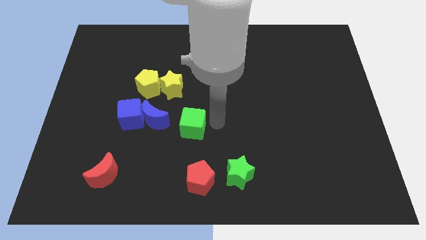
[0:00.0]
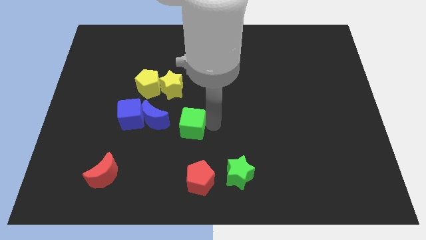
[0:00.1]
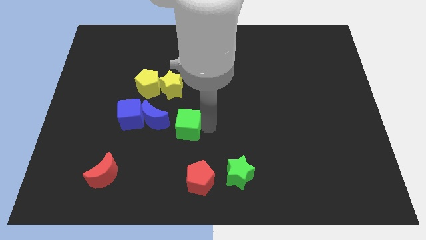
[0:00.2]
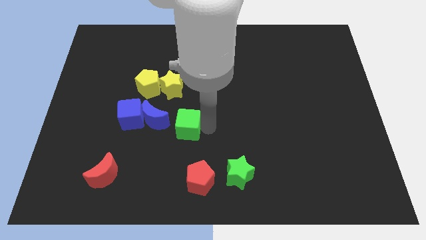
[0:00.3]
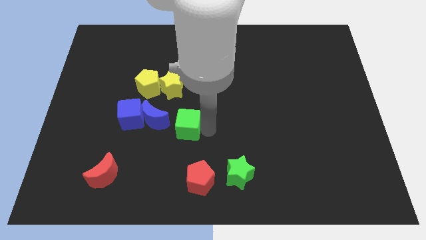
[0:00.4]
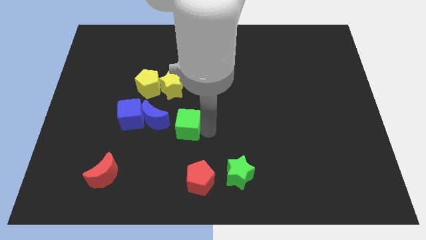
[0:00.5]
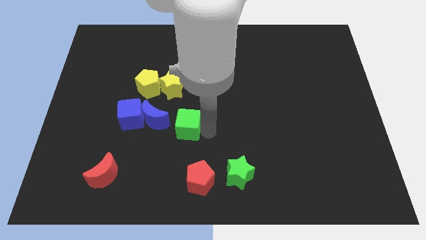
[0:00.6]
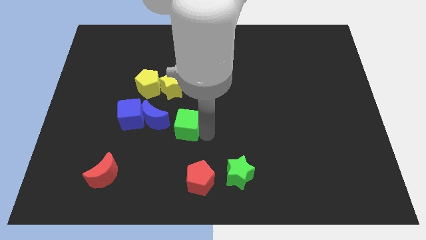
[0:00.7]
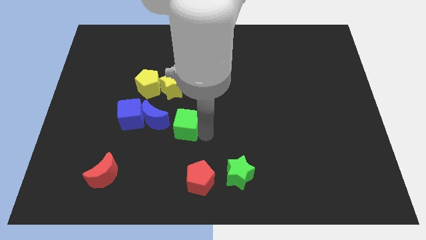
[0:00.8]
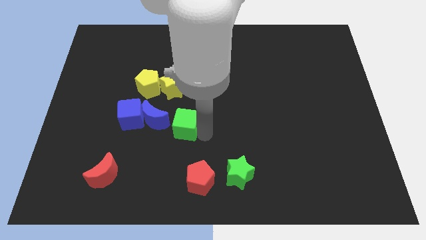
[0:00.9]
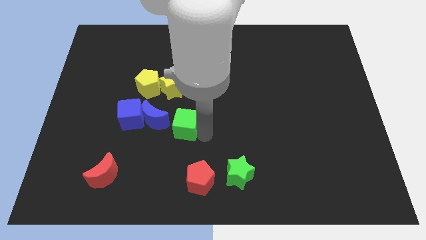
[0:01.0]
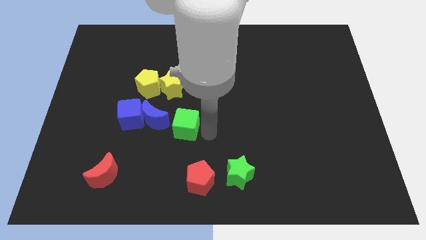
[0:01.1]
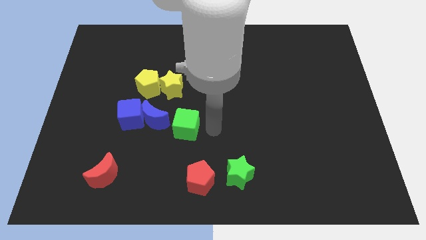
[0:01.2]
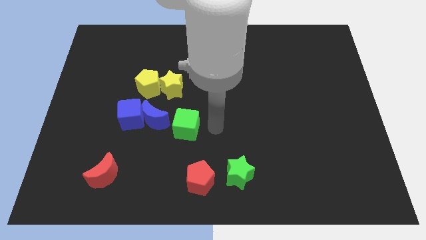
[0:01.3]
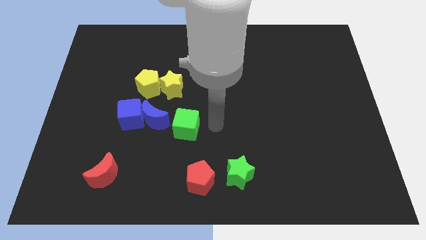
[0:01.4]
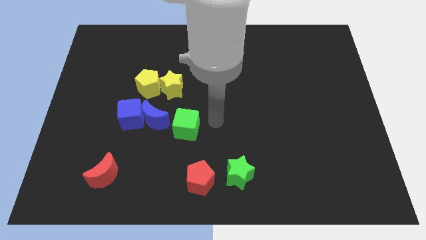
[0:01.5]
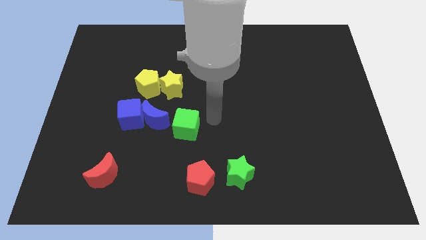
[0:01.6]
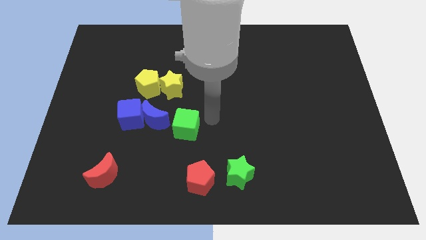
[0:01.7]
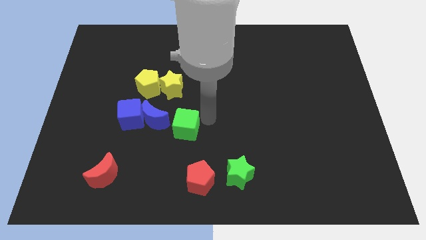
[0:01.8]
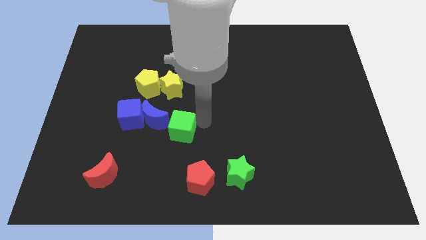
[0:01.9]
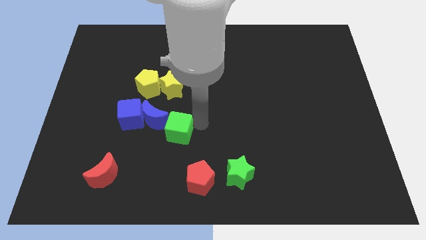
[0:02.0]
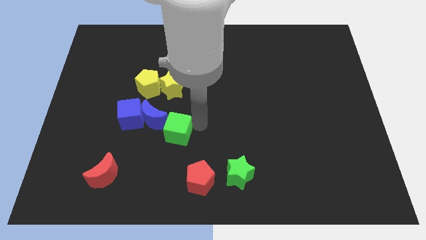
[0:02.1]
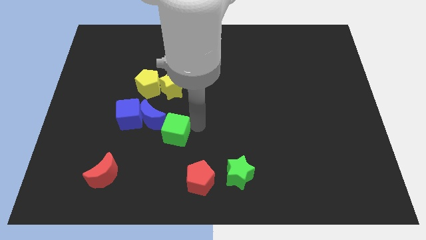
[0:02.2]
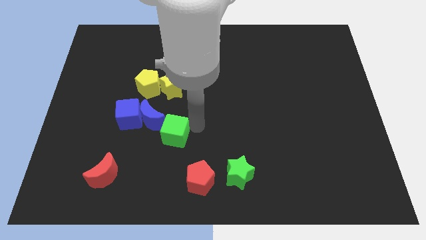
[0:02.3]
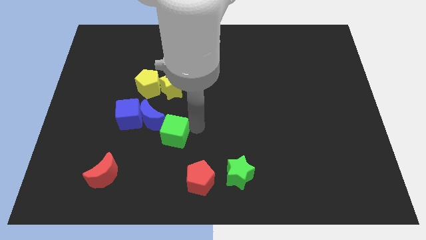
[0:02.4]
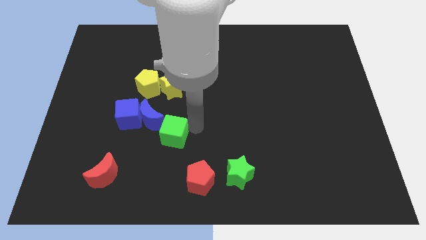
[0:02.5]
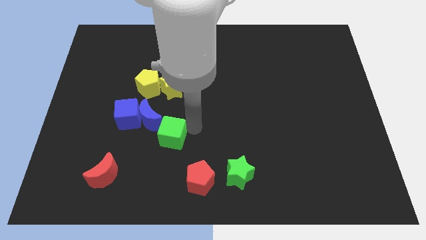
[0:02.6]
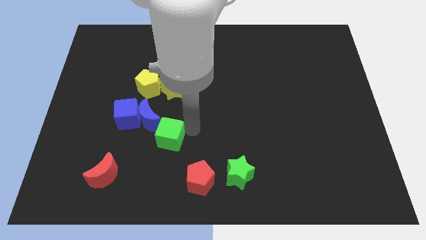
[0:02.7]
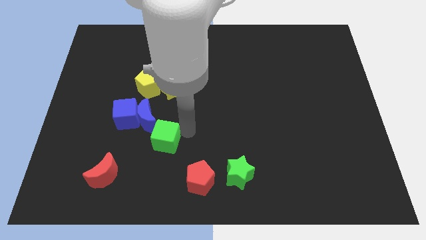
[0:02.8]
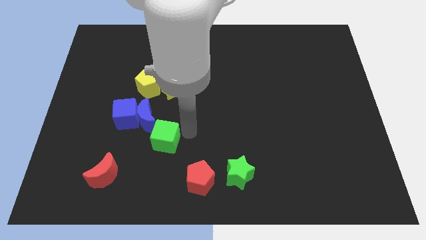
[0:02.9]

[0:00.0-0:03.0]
push green cube above red pentagon

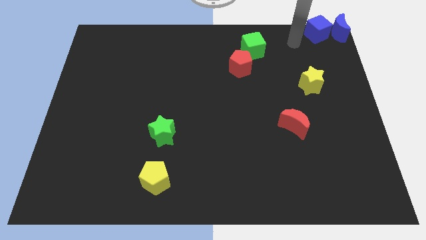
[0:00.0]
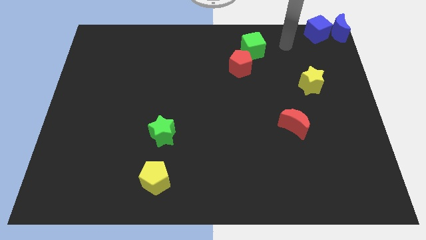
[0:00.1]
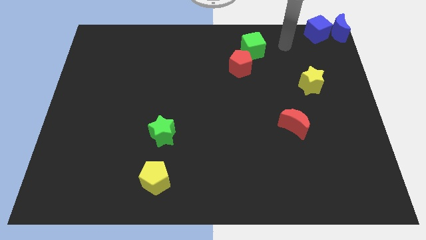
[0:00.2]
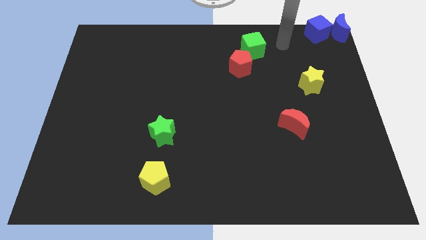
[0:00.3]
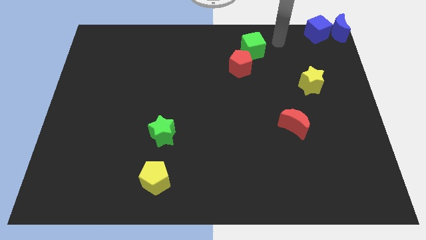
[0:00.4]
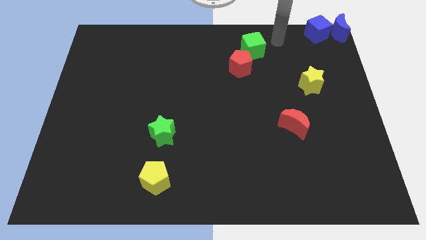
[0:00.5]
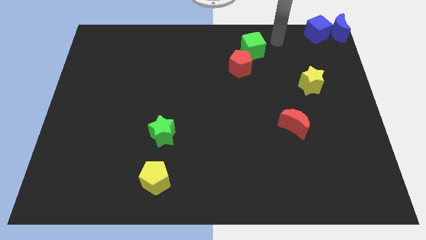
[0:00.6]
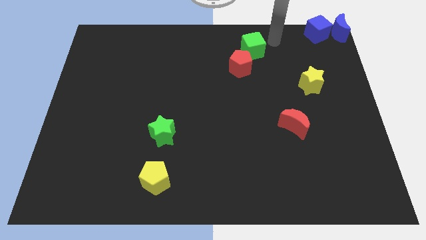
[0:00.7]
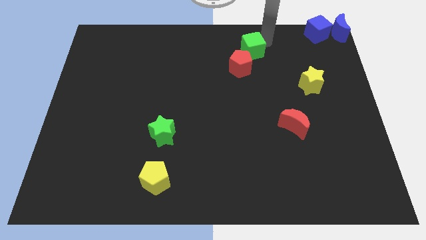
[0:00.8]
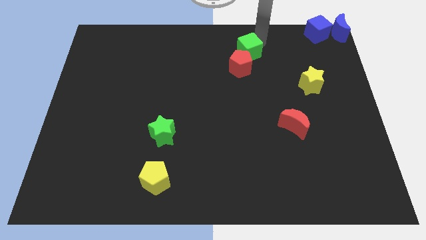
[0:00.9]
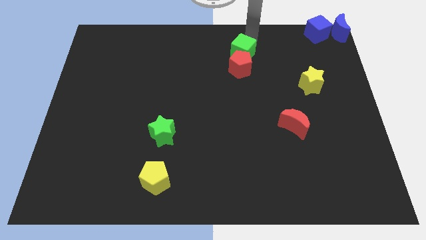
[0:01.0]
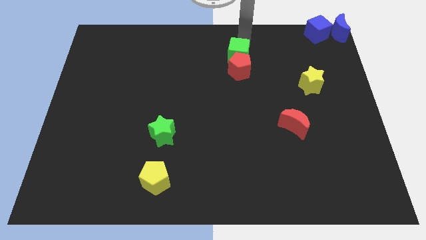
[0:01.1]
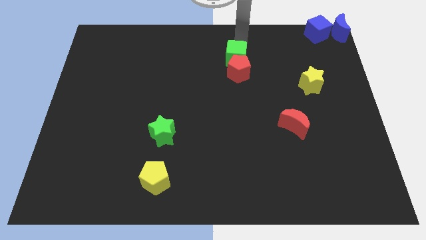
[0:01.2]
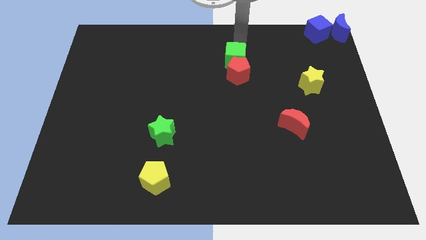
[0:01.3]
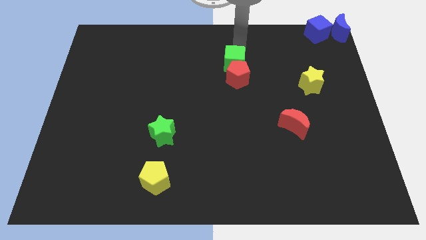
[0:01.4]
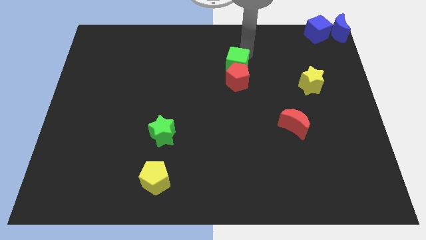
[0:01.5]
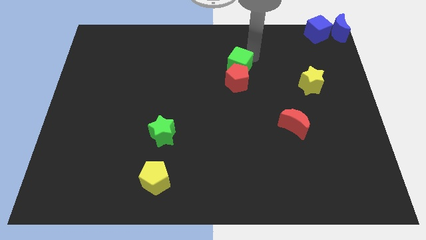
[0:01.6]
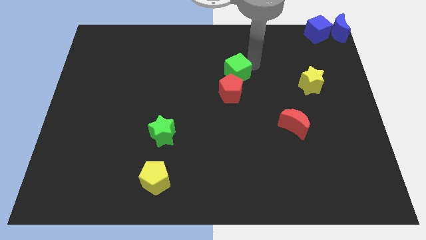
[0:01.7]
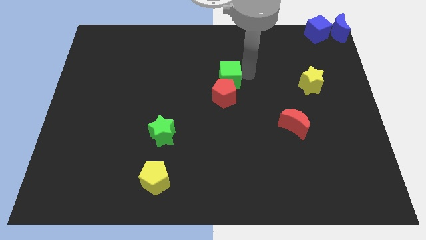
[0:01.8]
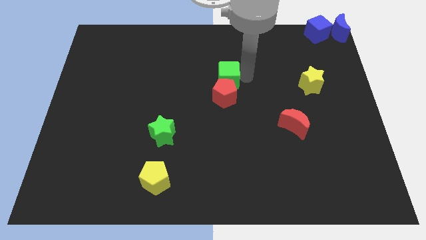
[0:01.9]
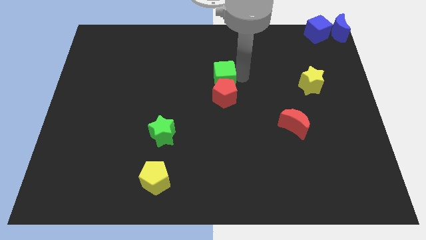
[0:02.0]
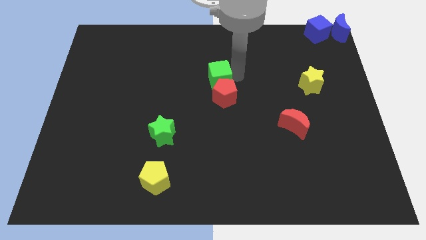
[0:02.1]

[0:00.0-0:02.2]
move the green cube and red pentagon to the center

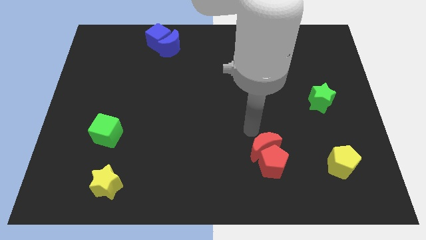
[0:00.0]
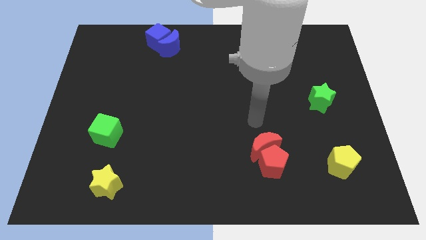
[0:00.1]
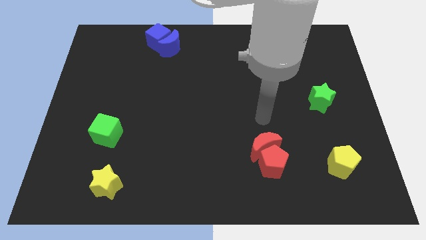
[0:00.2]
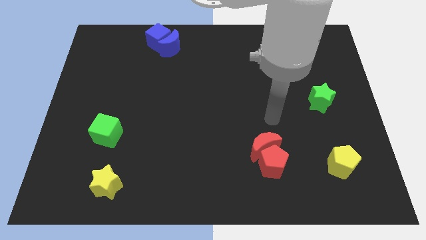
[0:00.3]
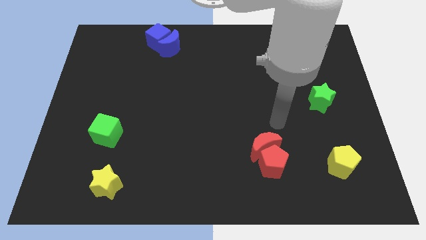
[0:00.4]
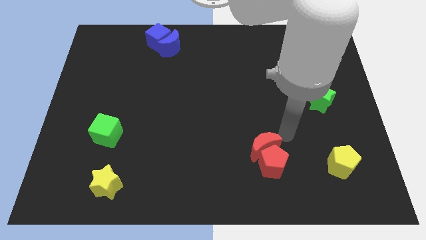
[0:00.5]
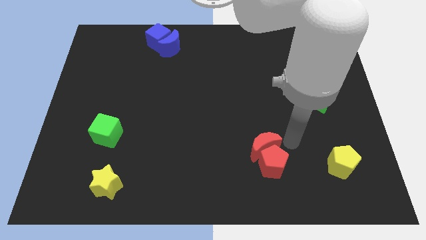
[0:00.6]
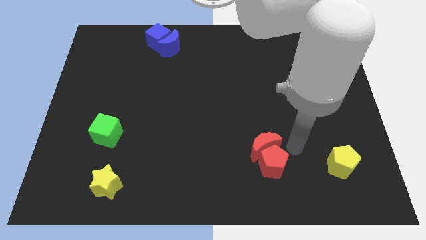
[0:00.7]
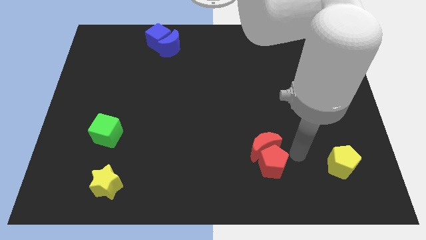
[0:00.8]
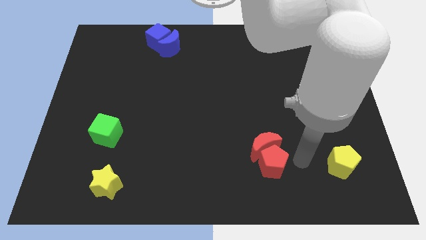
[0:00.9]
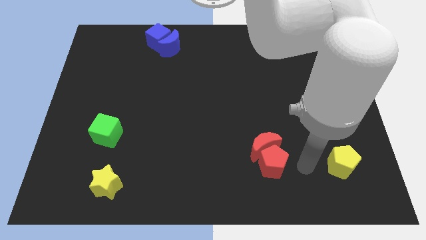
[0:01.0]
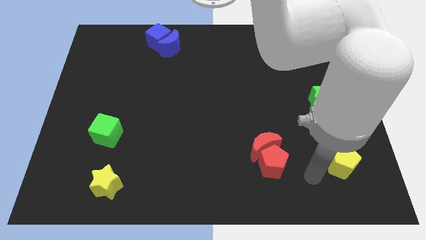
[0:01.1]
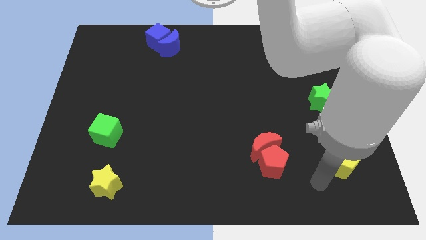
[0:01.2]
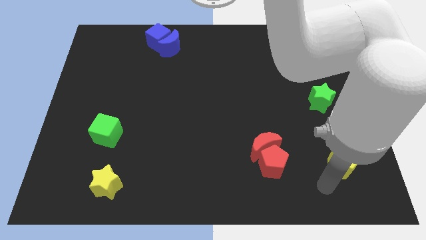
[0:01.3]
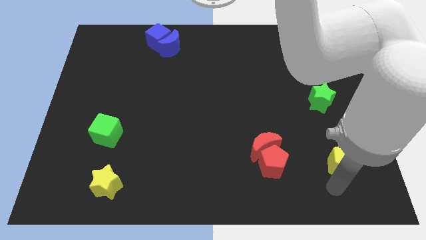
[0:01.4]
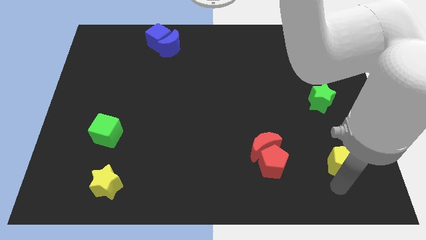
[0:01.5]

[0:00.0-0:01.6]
move your arm towards the bottom of the yellow pentagon

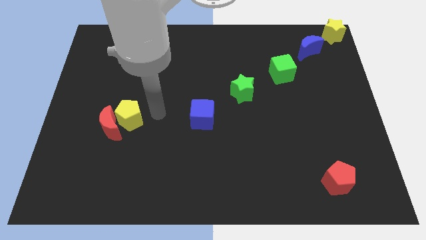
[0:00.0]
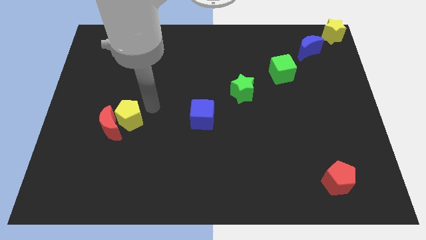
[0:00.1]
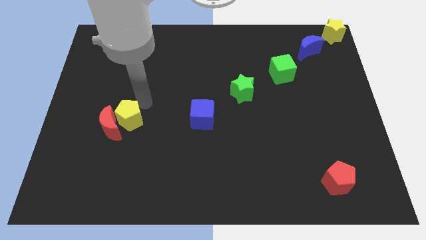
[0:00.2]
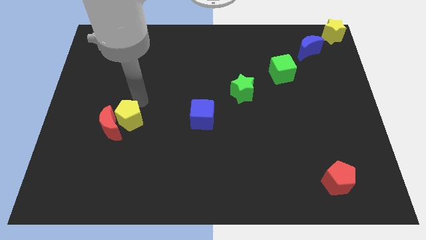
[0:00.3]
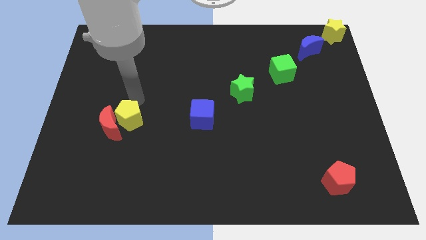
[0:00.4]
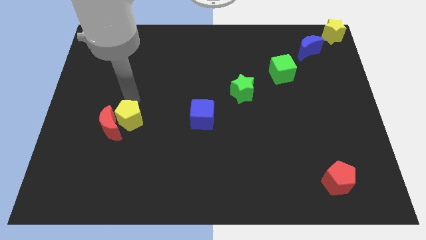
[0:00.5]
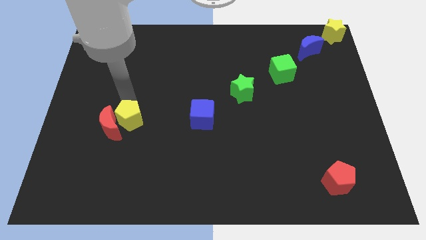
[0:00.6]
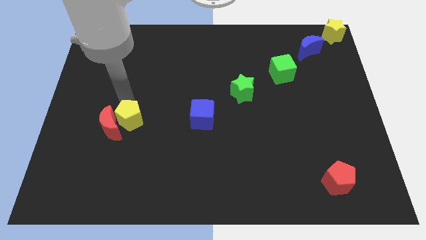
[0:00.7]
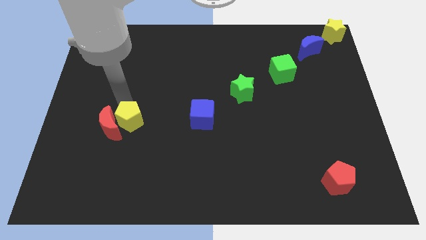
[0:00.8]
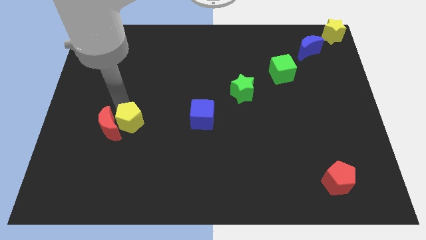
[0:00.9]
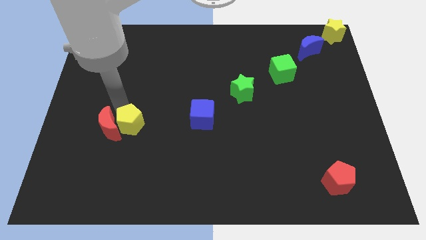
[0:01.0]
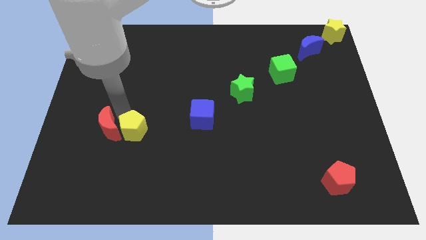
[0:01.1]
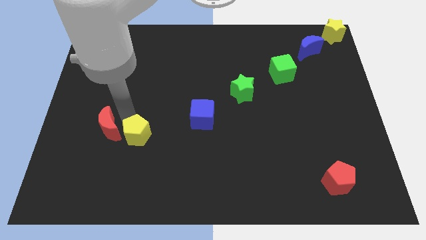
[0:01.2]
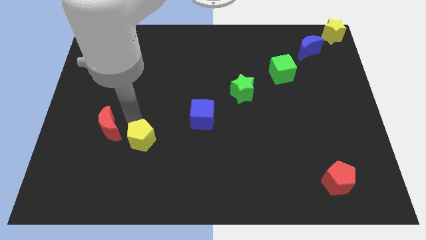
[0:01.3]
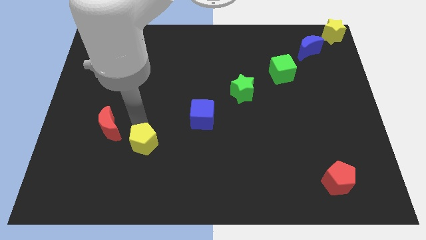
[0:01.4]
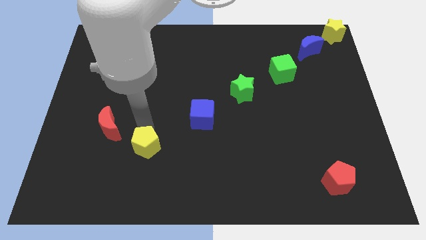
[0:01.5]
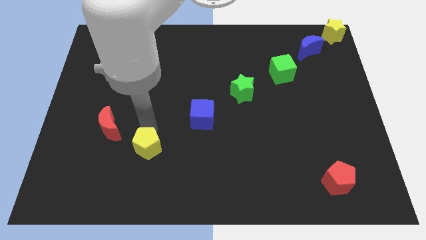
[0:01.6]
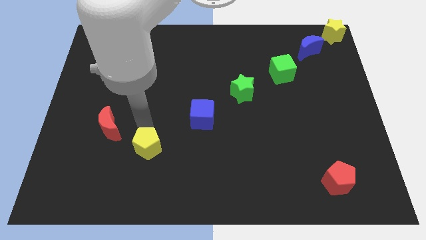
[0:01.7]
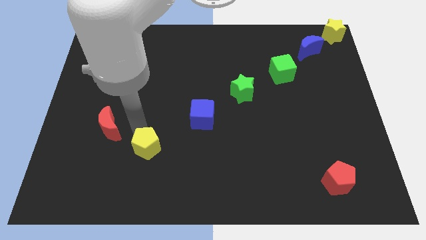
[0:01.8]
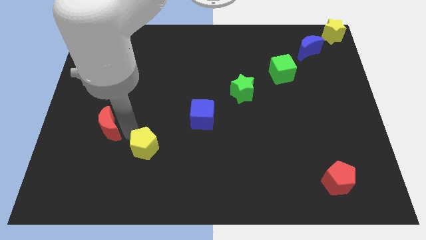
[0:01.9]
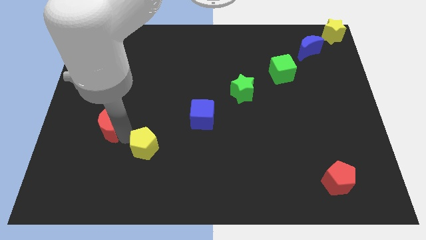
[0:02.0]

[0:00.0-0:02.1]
separate the yellow pentagon from the red crescent
